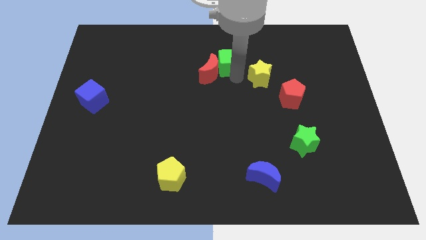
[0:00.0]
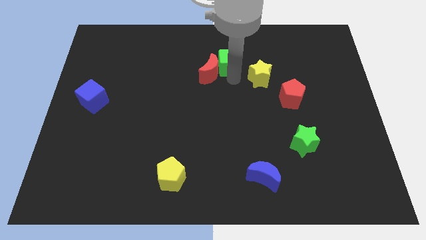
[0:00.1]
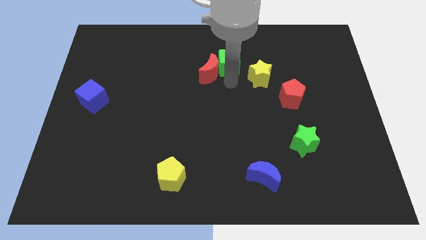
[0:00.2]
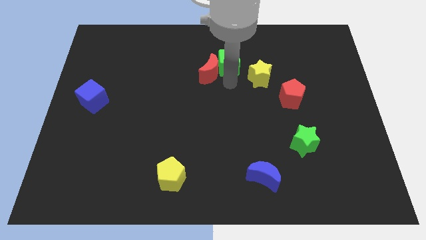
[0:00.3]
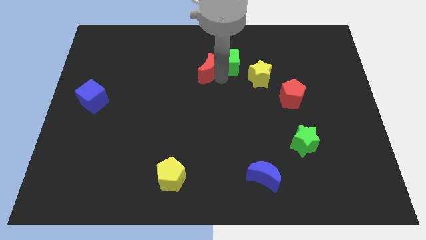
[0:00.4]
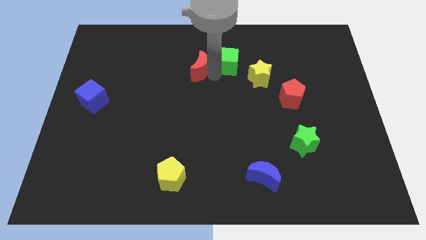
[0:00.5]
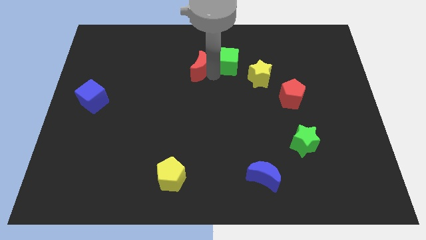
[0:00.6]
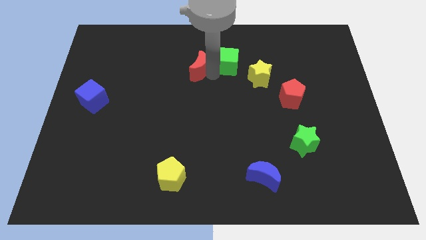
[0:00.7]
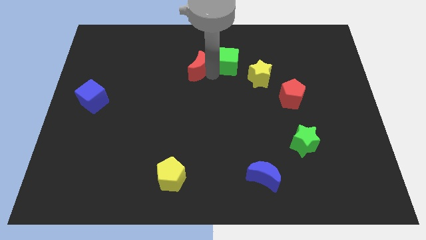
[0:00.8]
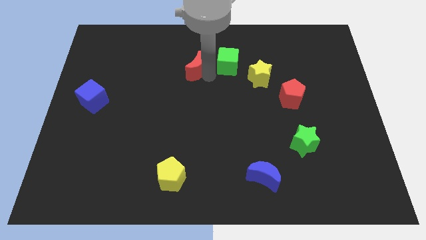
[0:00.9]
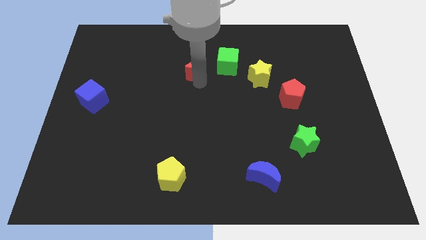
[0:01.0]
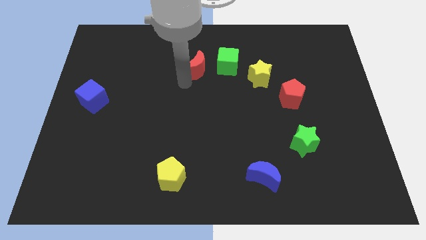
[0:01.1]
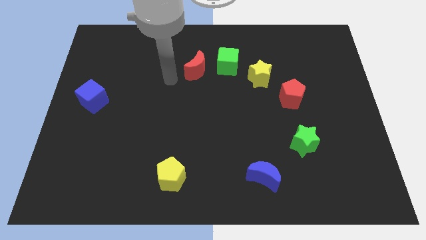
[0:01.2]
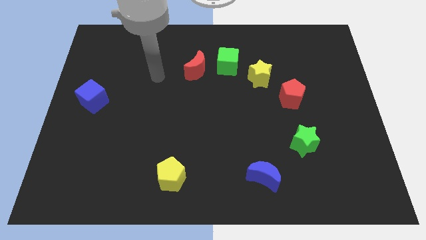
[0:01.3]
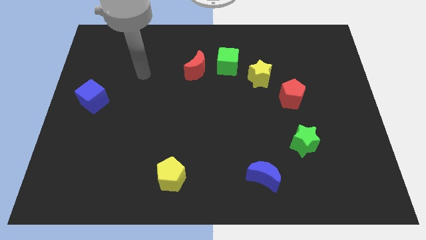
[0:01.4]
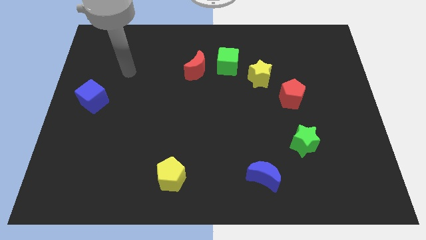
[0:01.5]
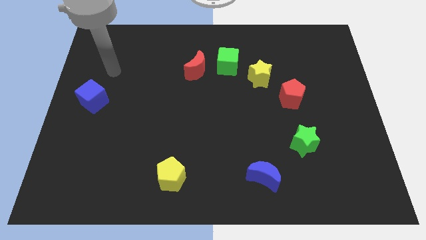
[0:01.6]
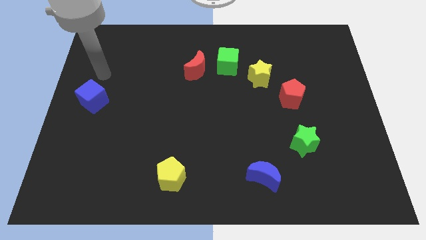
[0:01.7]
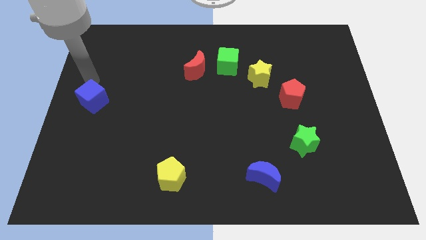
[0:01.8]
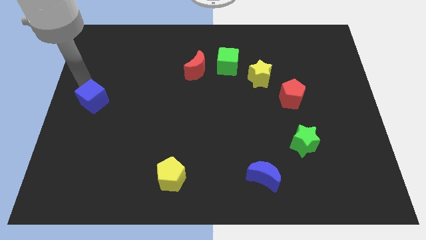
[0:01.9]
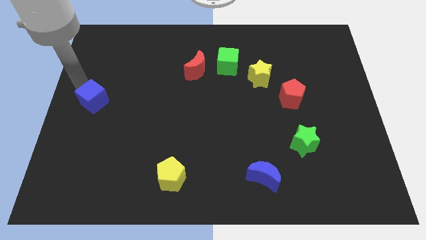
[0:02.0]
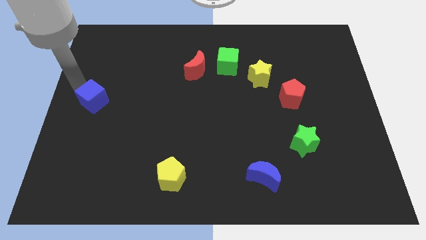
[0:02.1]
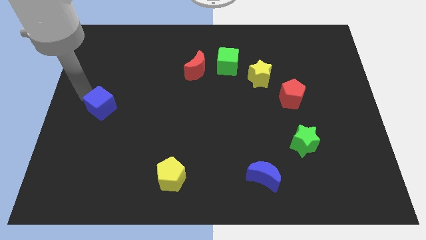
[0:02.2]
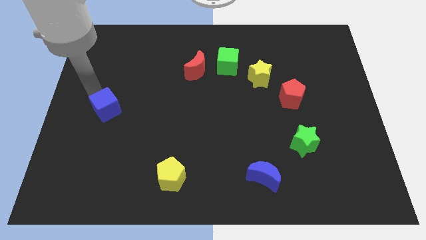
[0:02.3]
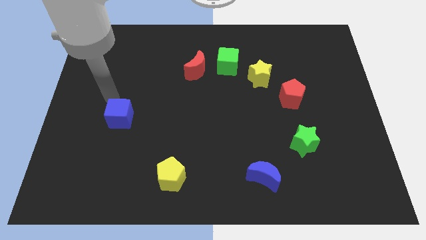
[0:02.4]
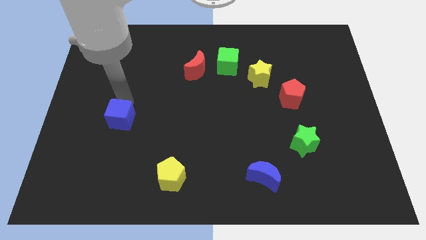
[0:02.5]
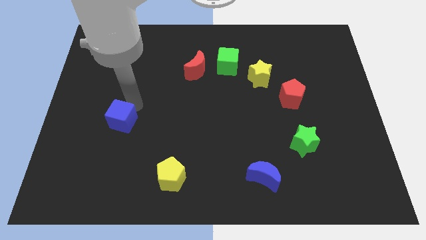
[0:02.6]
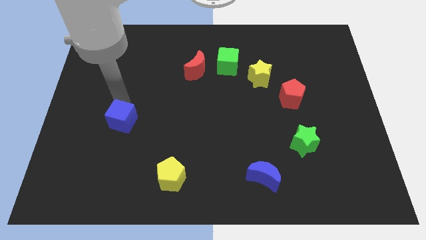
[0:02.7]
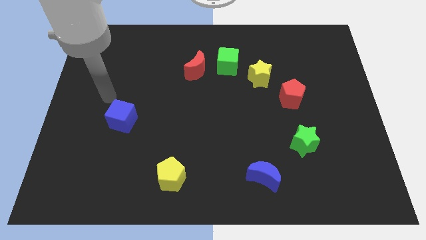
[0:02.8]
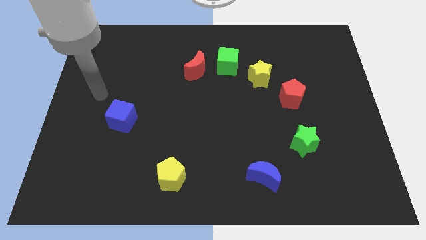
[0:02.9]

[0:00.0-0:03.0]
place blue cube slightly towards right down

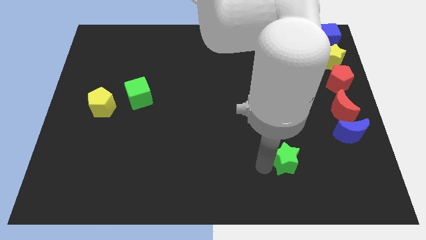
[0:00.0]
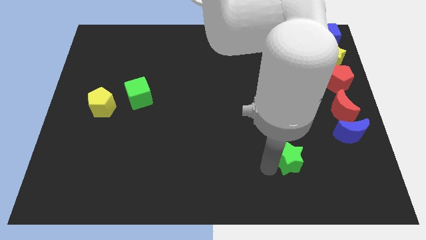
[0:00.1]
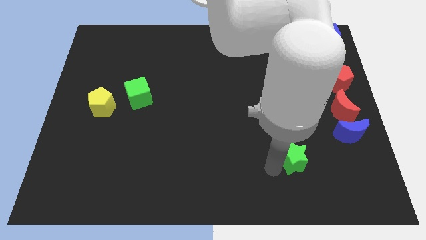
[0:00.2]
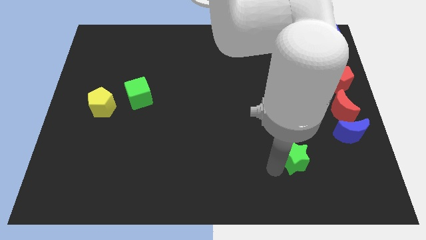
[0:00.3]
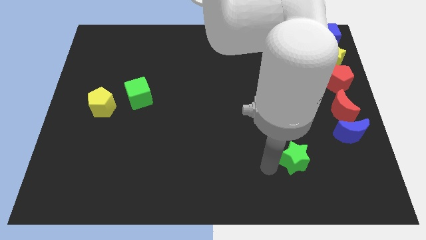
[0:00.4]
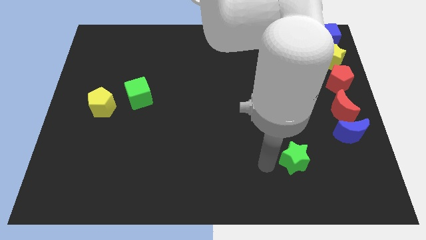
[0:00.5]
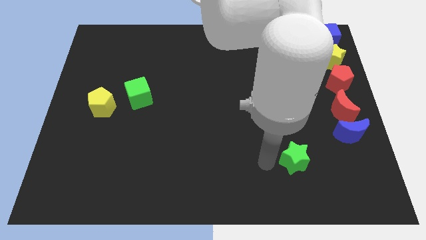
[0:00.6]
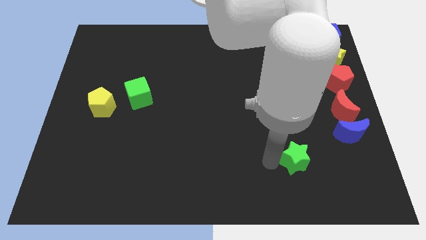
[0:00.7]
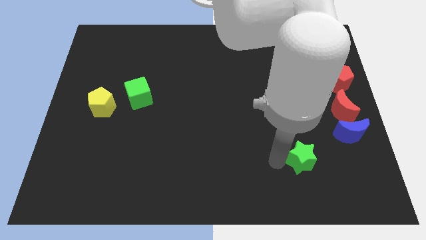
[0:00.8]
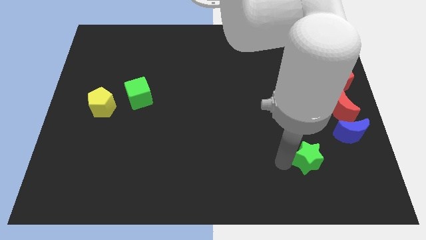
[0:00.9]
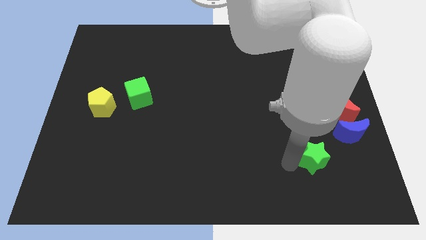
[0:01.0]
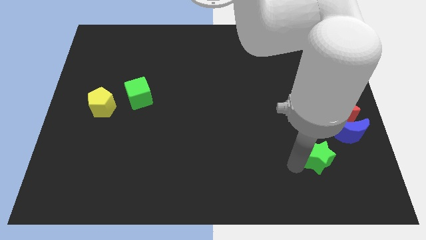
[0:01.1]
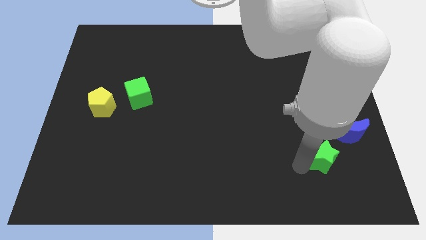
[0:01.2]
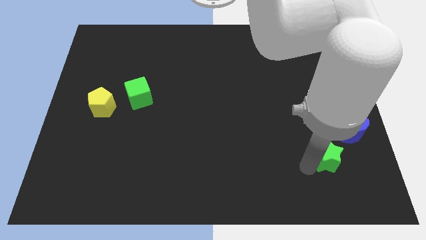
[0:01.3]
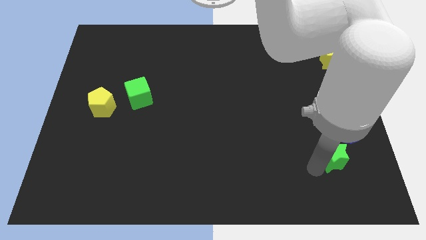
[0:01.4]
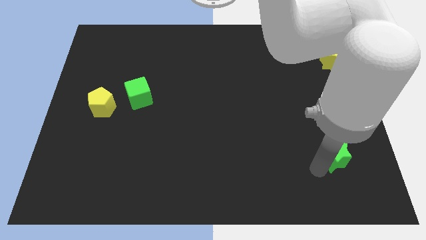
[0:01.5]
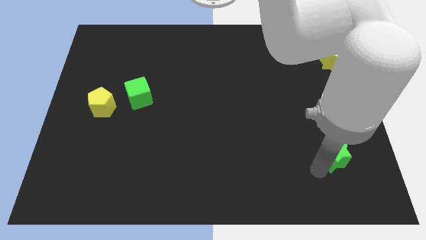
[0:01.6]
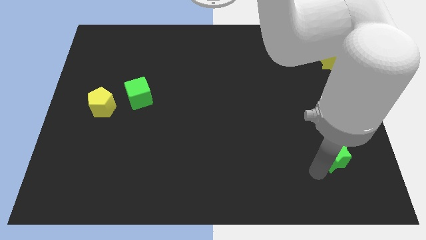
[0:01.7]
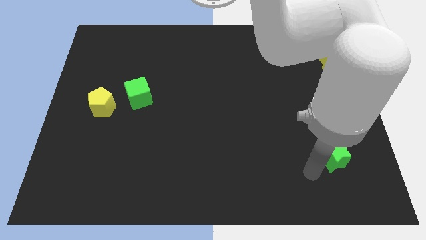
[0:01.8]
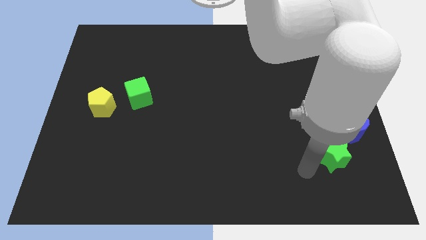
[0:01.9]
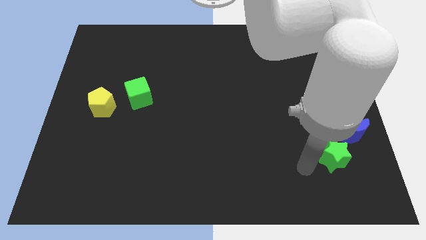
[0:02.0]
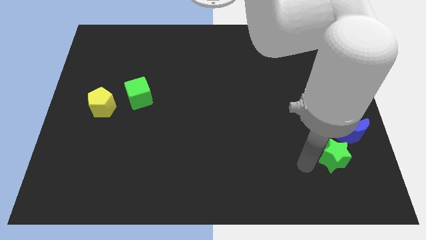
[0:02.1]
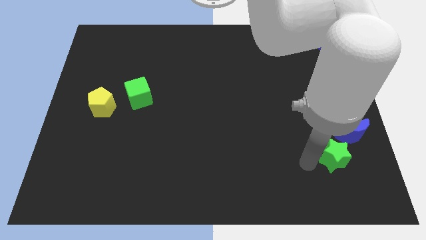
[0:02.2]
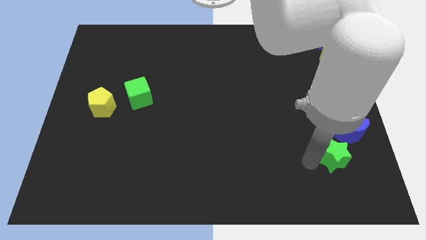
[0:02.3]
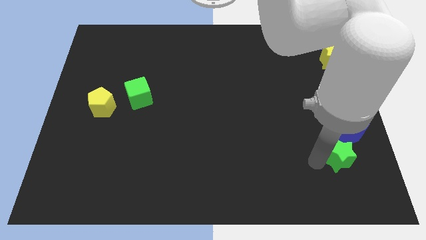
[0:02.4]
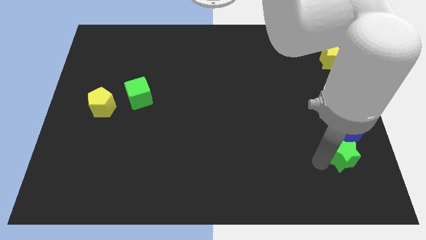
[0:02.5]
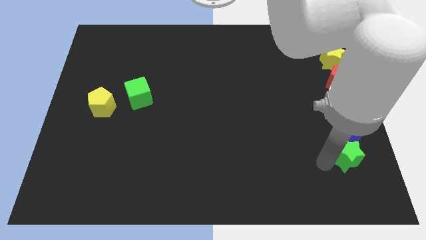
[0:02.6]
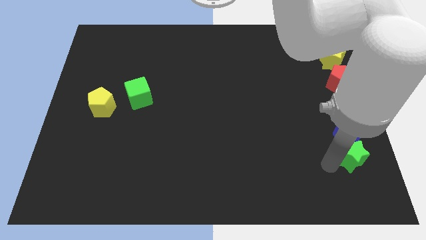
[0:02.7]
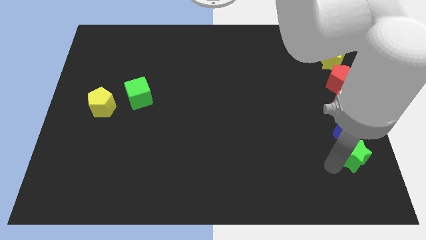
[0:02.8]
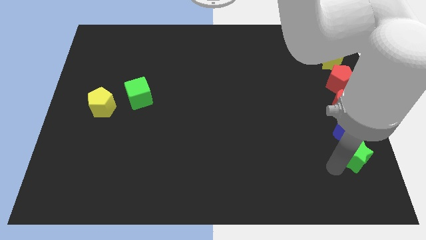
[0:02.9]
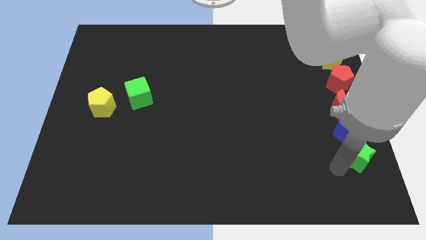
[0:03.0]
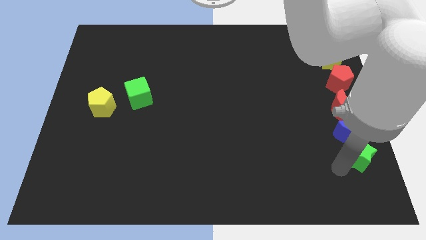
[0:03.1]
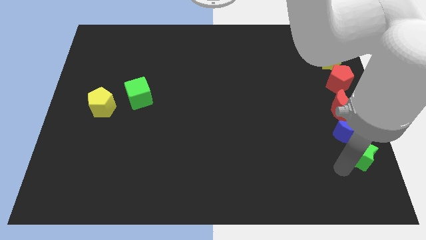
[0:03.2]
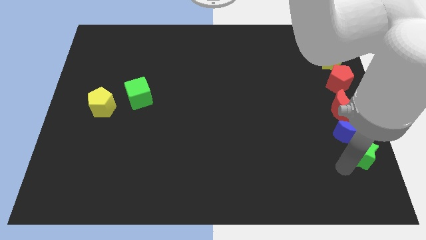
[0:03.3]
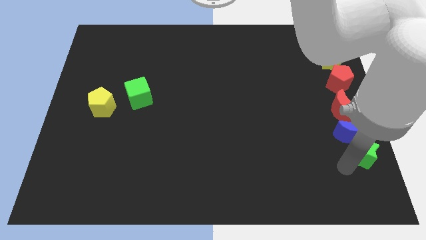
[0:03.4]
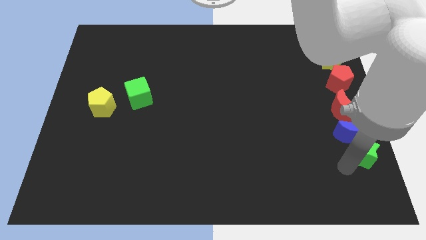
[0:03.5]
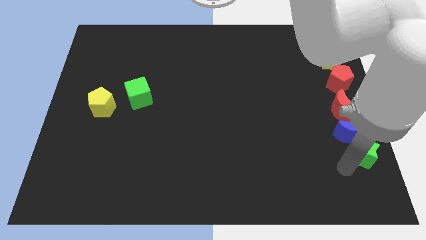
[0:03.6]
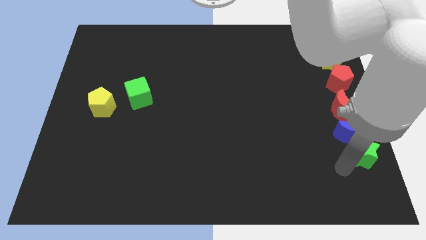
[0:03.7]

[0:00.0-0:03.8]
place the green star vertically below the blue moon

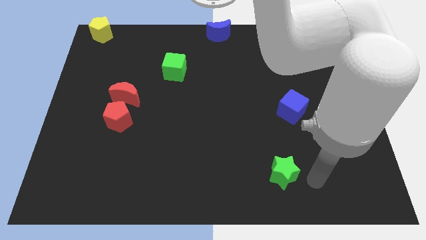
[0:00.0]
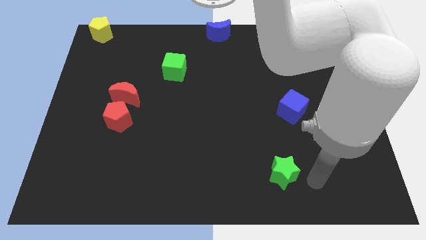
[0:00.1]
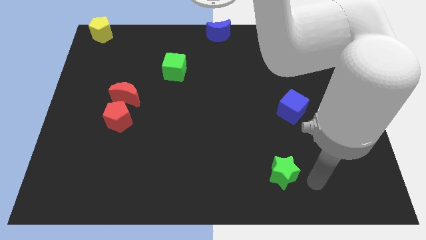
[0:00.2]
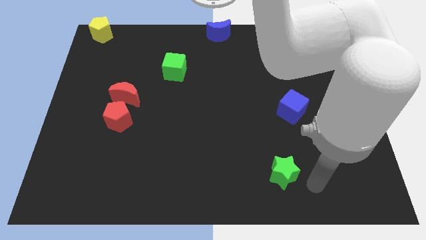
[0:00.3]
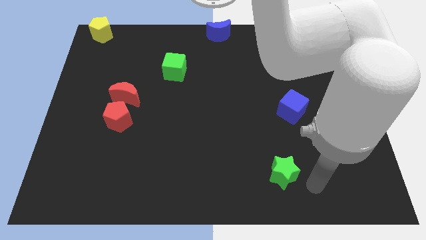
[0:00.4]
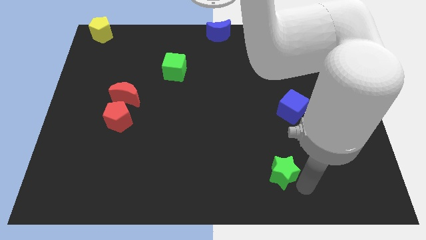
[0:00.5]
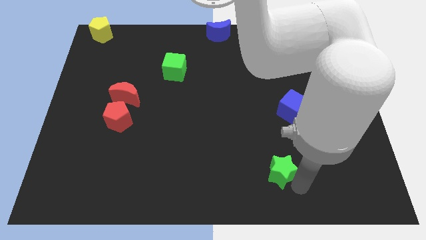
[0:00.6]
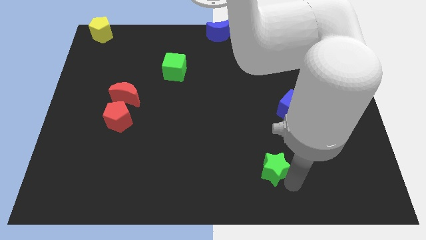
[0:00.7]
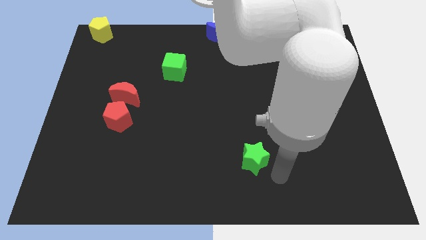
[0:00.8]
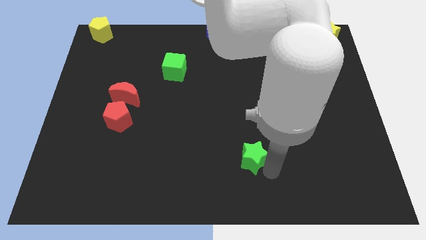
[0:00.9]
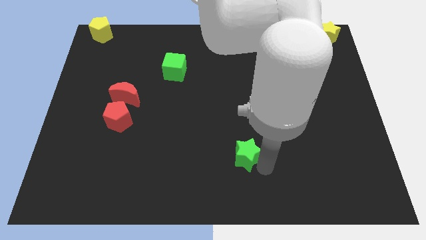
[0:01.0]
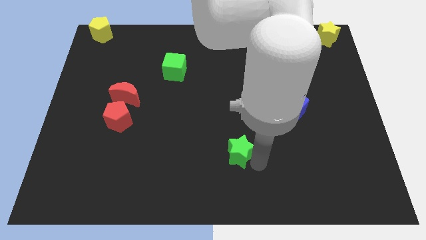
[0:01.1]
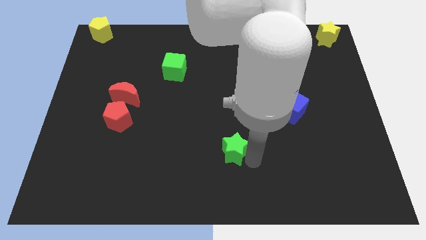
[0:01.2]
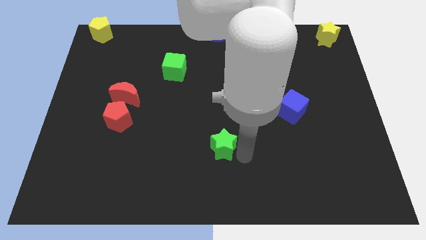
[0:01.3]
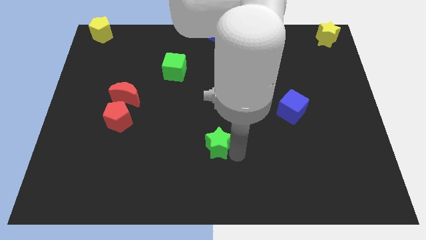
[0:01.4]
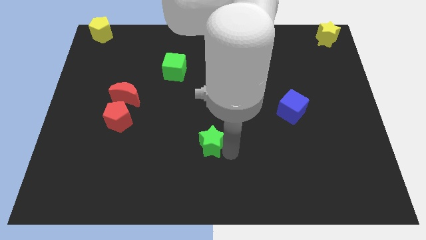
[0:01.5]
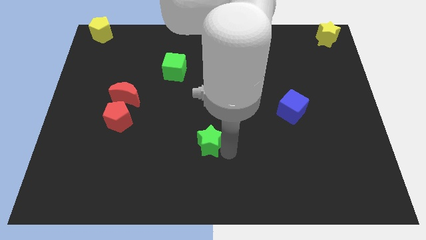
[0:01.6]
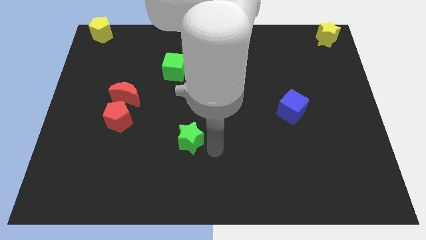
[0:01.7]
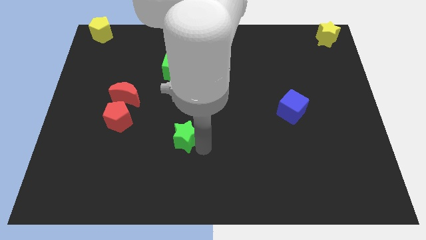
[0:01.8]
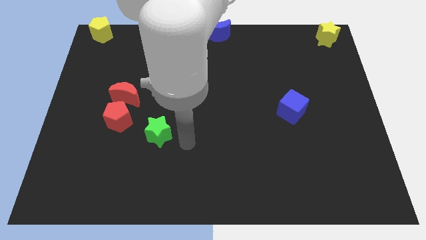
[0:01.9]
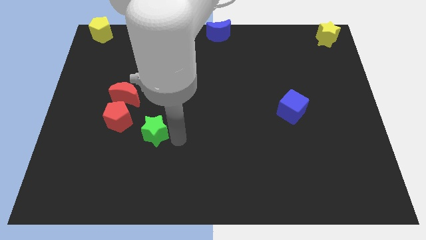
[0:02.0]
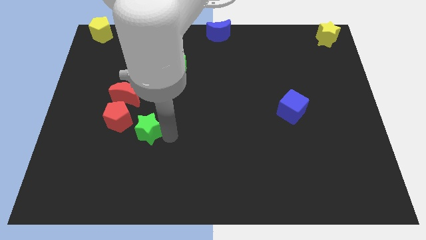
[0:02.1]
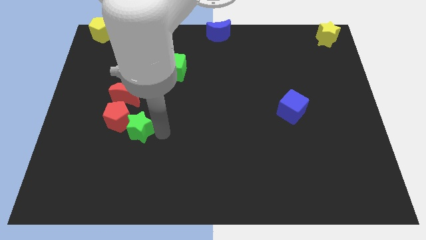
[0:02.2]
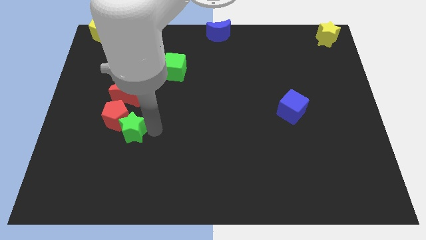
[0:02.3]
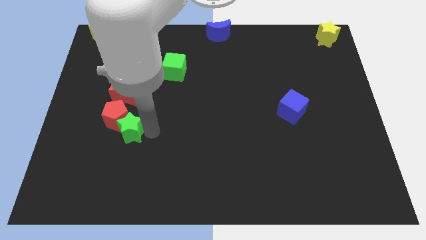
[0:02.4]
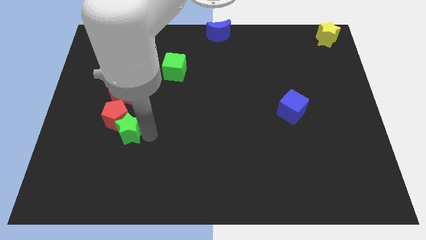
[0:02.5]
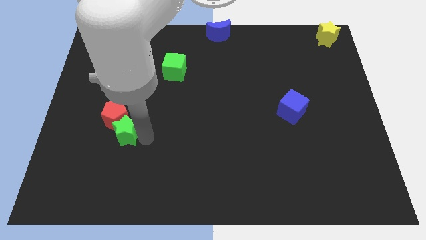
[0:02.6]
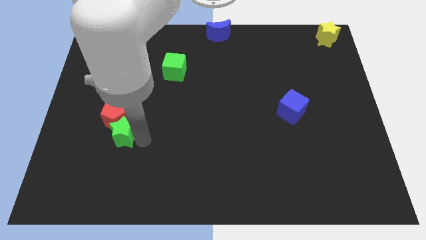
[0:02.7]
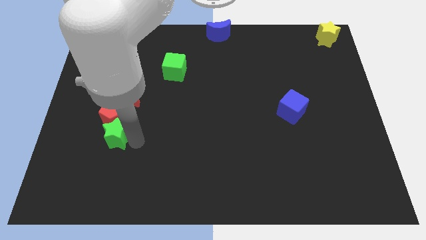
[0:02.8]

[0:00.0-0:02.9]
move the green star to the bottom of the red pentagon
